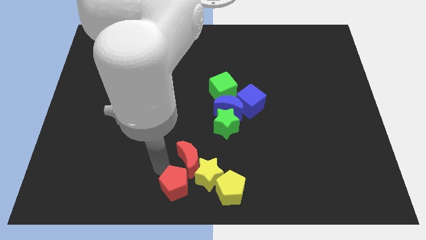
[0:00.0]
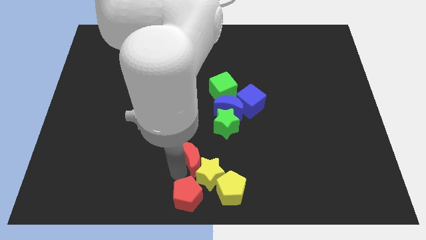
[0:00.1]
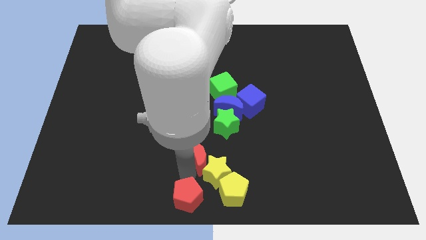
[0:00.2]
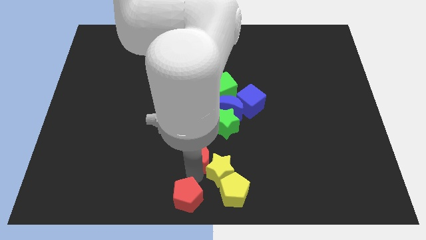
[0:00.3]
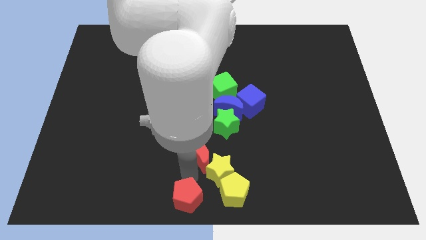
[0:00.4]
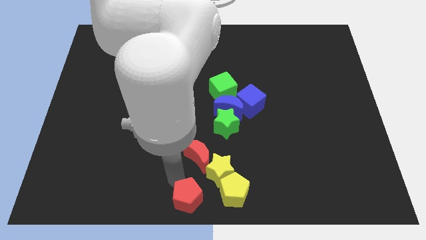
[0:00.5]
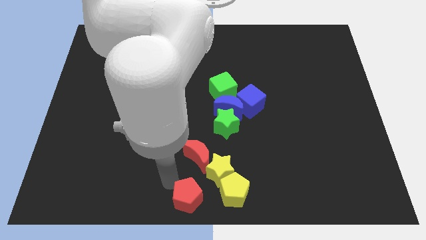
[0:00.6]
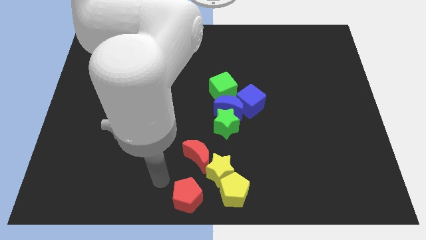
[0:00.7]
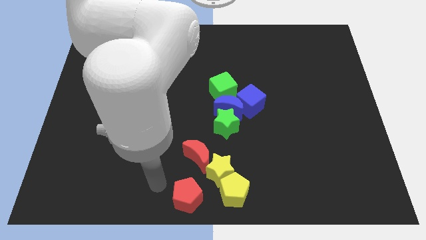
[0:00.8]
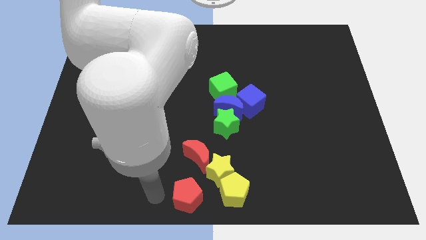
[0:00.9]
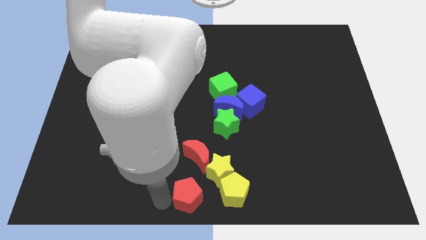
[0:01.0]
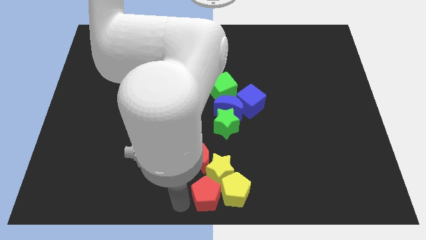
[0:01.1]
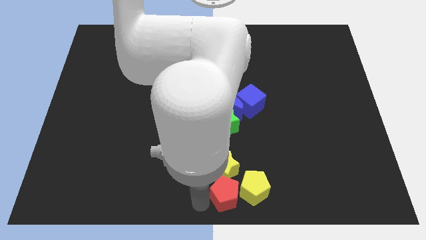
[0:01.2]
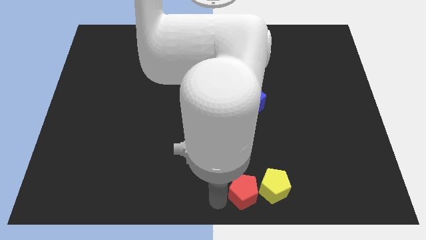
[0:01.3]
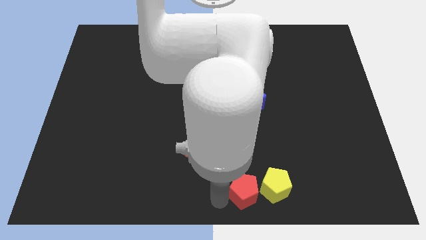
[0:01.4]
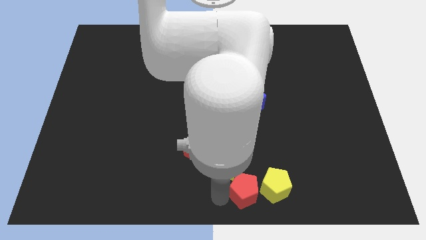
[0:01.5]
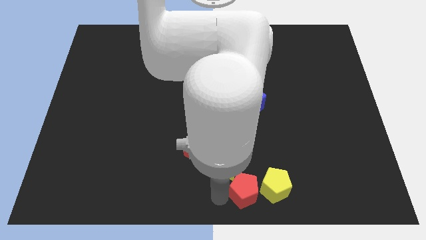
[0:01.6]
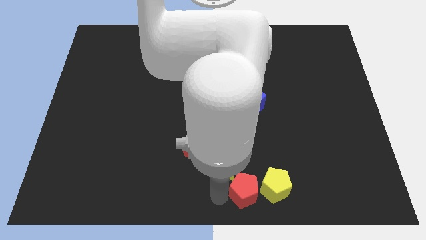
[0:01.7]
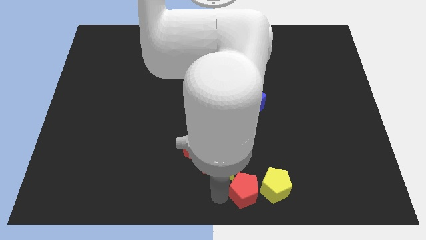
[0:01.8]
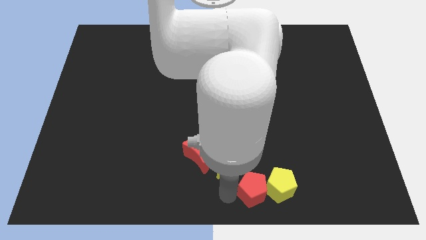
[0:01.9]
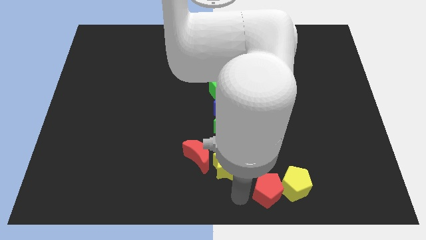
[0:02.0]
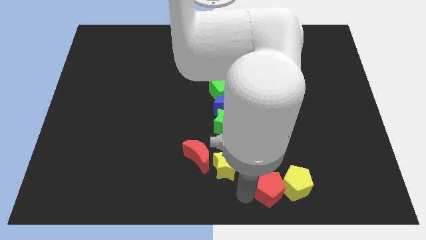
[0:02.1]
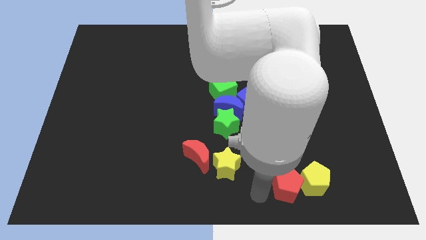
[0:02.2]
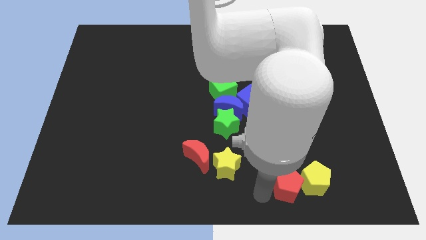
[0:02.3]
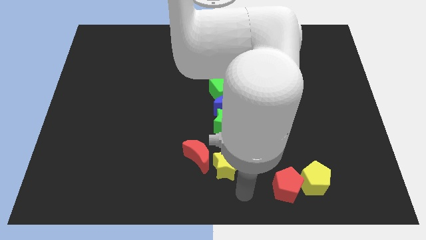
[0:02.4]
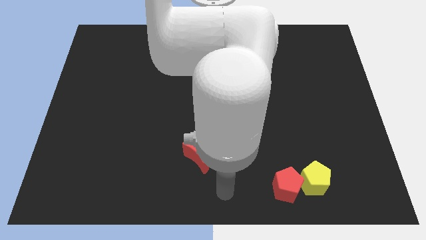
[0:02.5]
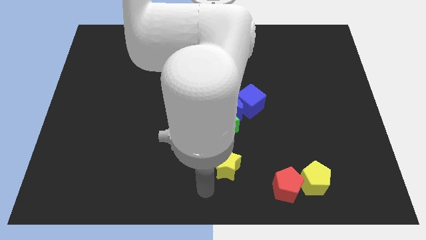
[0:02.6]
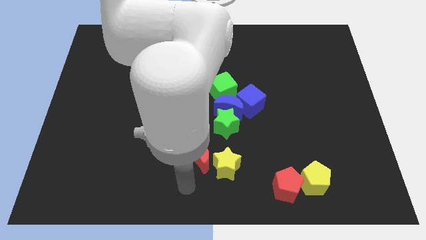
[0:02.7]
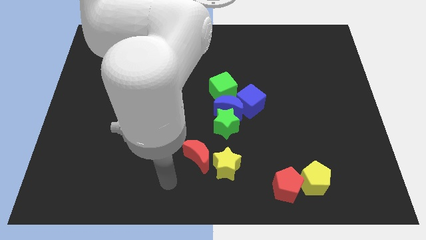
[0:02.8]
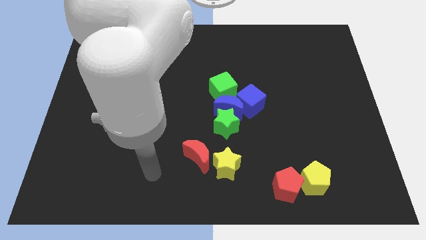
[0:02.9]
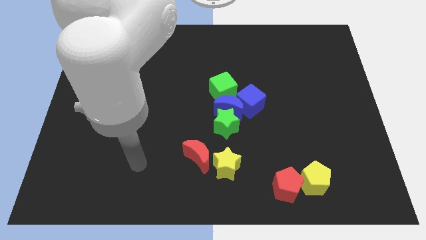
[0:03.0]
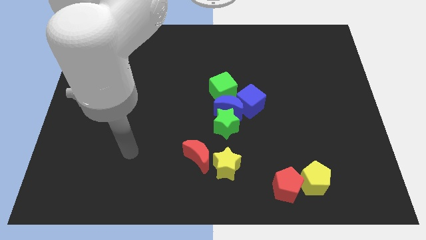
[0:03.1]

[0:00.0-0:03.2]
push the red pentagon into the yellow pentagon

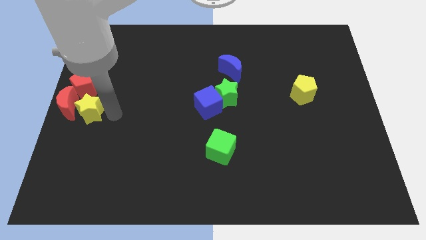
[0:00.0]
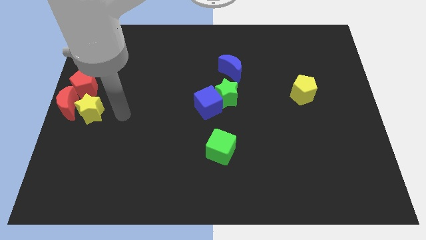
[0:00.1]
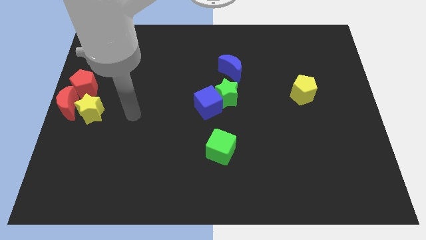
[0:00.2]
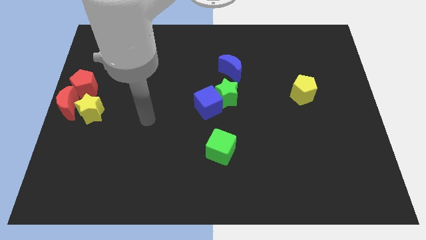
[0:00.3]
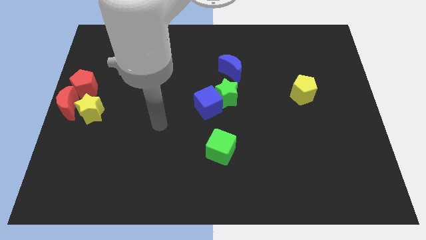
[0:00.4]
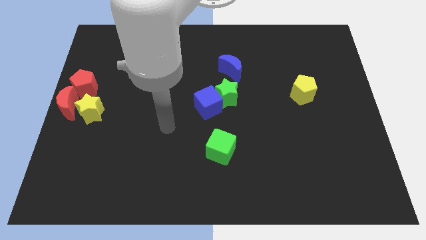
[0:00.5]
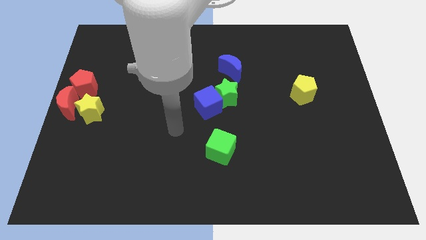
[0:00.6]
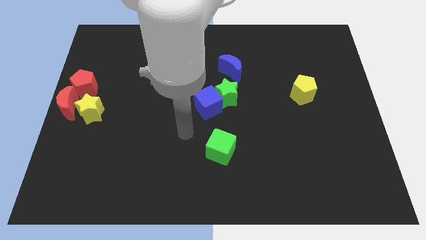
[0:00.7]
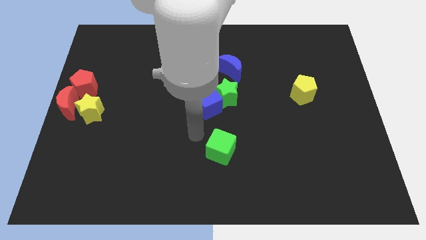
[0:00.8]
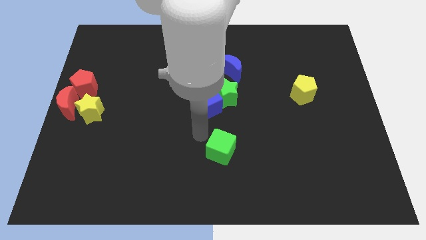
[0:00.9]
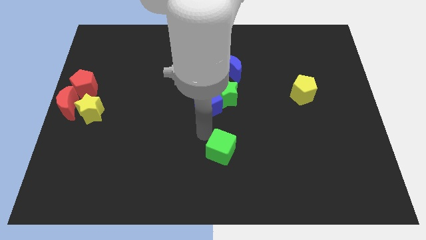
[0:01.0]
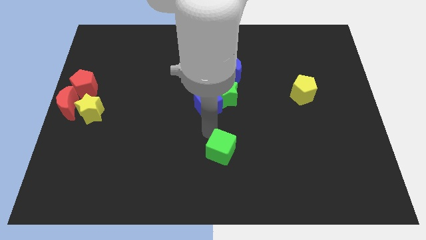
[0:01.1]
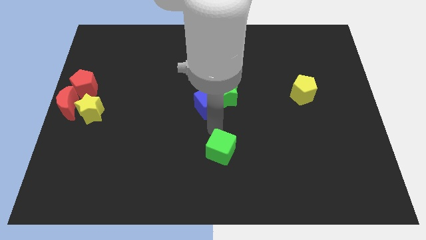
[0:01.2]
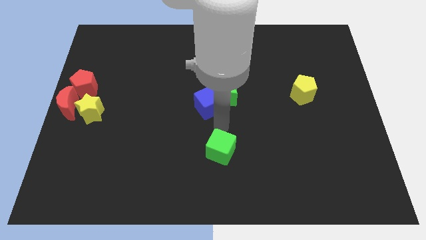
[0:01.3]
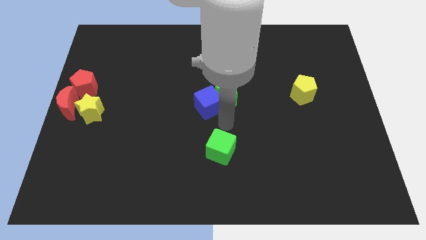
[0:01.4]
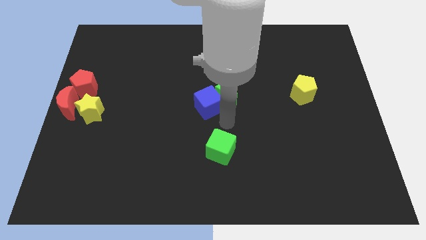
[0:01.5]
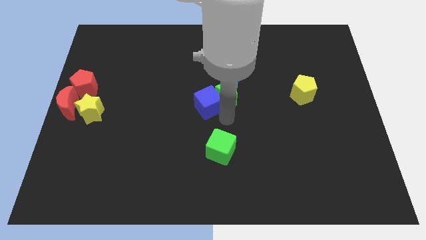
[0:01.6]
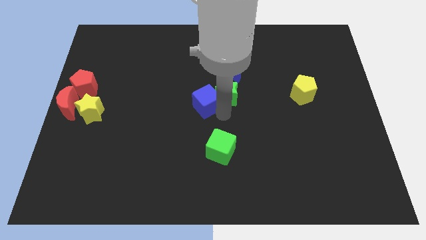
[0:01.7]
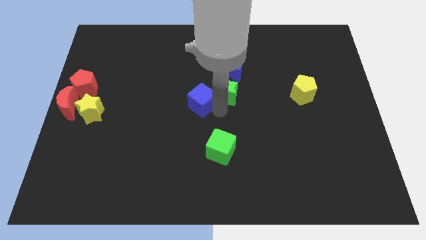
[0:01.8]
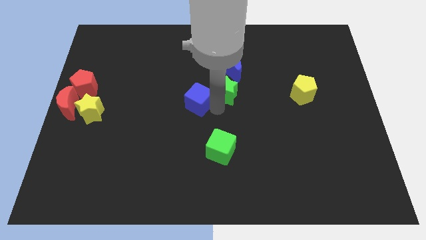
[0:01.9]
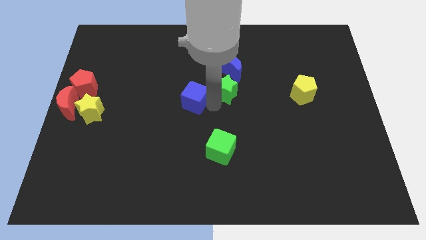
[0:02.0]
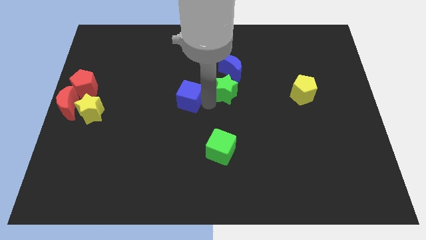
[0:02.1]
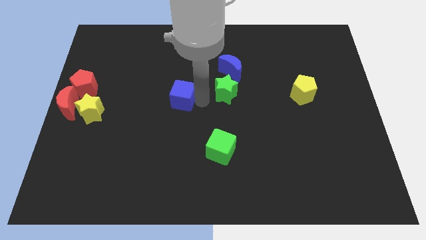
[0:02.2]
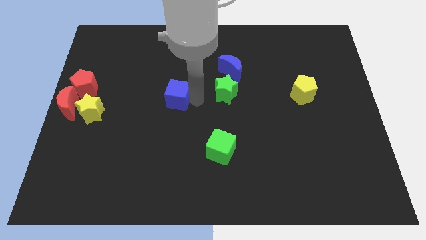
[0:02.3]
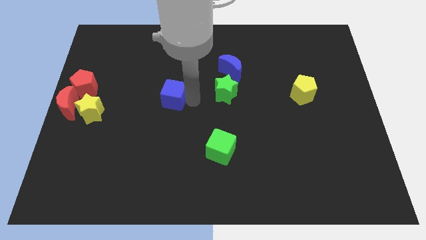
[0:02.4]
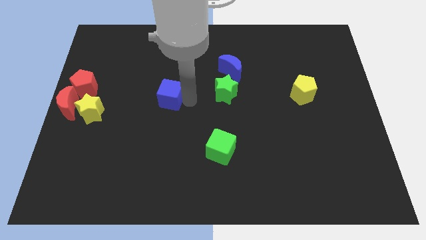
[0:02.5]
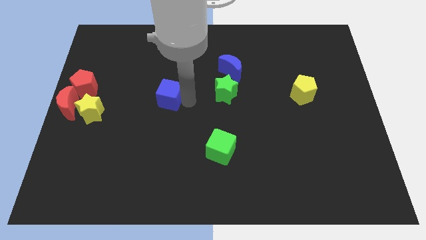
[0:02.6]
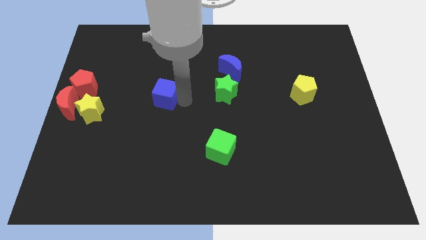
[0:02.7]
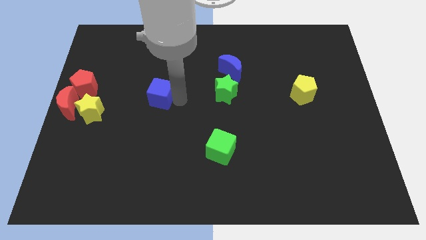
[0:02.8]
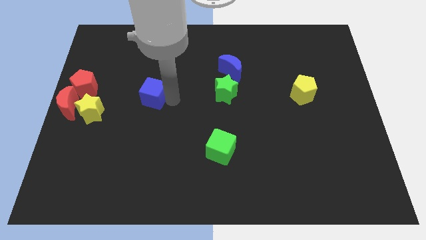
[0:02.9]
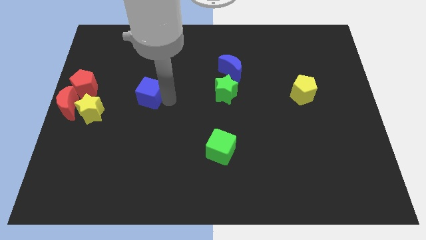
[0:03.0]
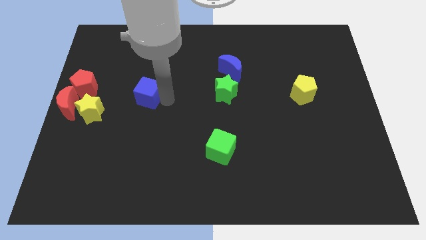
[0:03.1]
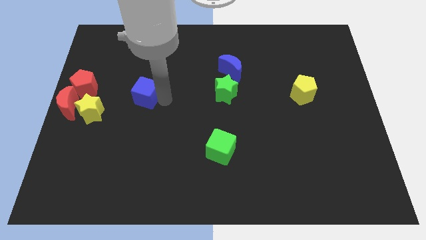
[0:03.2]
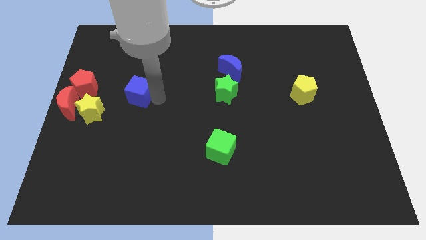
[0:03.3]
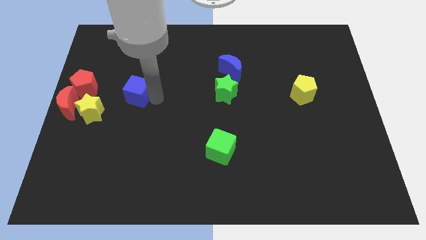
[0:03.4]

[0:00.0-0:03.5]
take the blue cube away from the green star

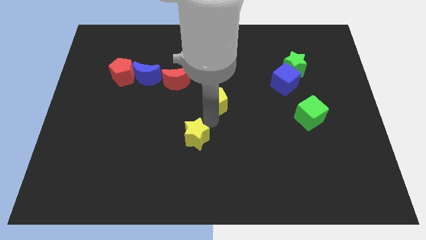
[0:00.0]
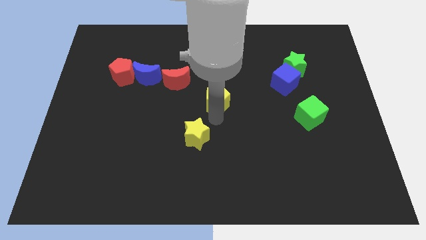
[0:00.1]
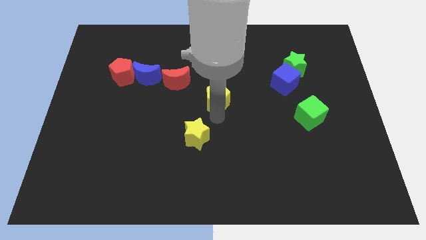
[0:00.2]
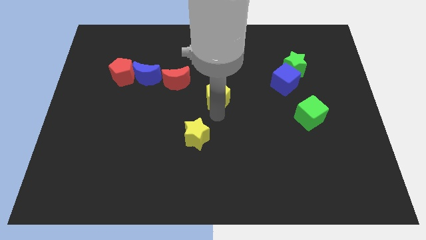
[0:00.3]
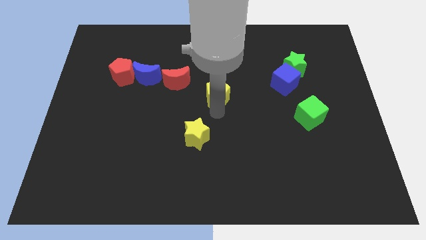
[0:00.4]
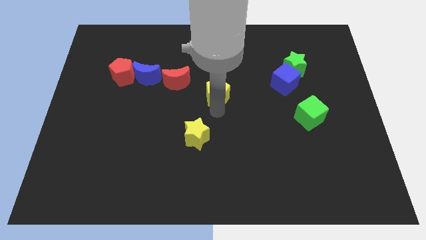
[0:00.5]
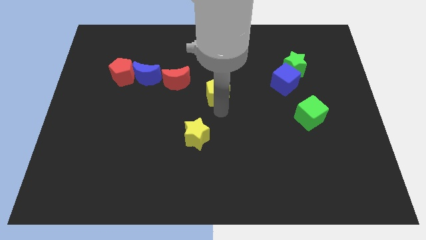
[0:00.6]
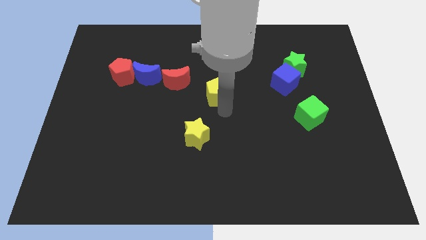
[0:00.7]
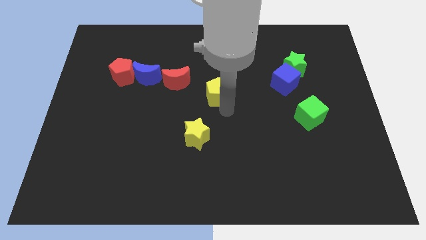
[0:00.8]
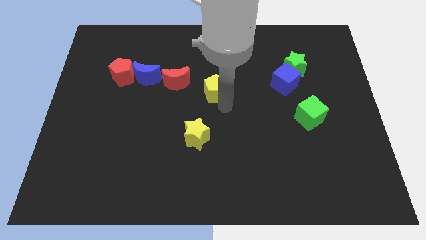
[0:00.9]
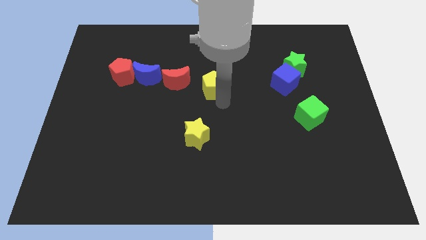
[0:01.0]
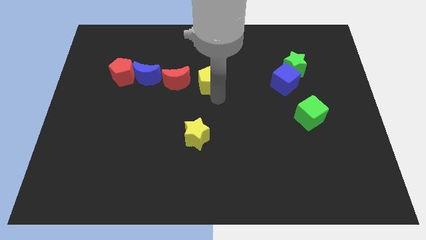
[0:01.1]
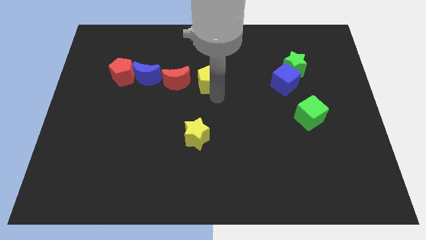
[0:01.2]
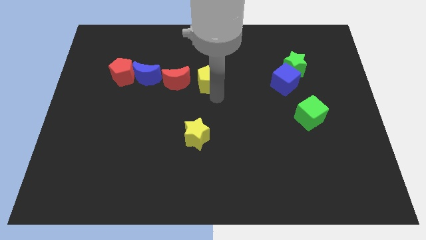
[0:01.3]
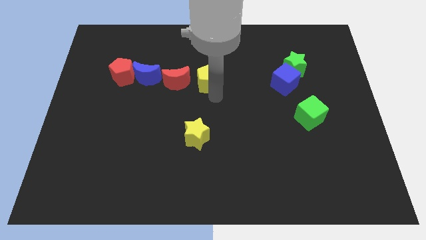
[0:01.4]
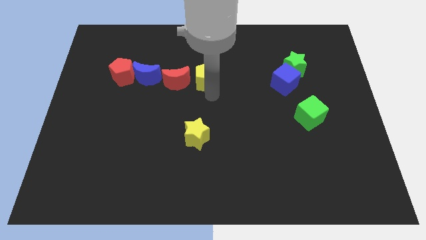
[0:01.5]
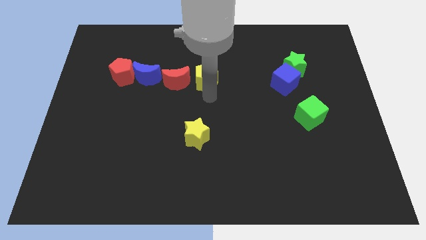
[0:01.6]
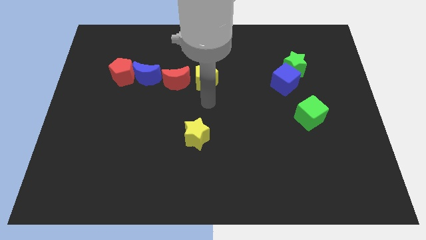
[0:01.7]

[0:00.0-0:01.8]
move the yellow pentagon to the right of the red moon

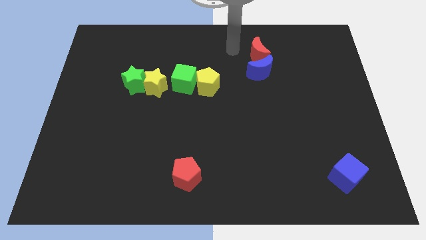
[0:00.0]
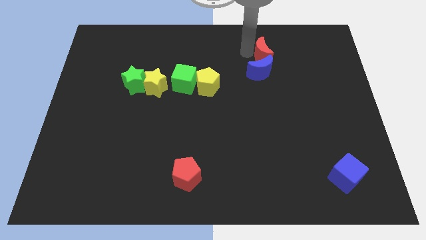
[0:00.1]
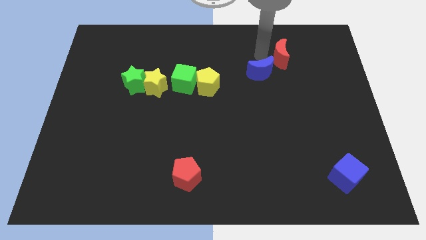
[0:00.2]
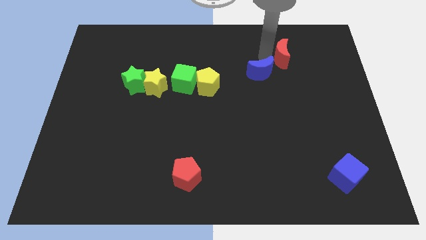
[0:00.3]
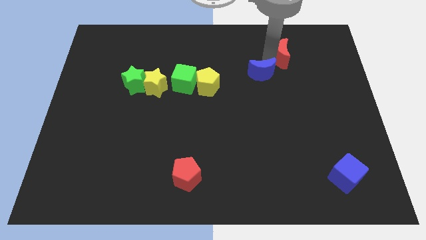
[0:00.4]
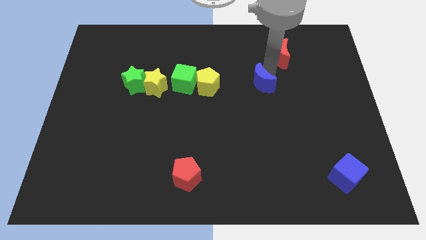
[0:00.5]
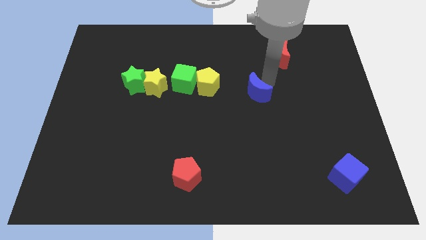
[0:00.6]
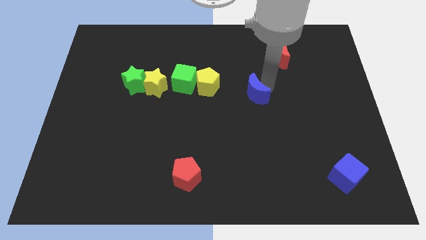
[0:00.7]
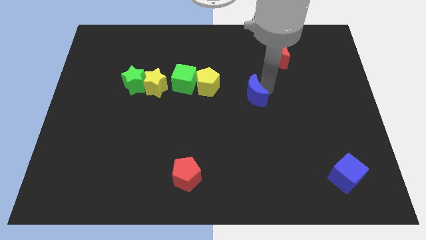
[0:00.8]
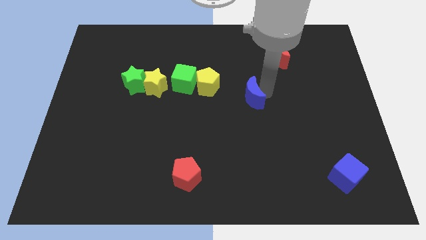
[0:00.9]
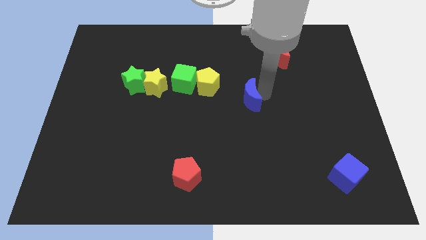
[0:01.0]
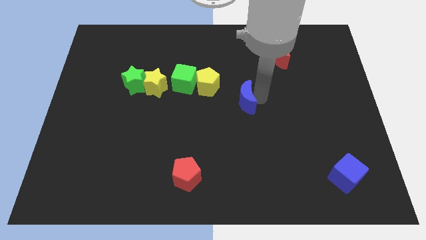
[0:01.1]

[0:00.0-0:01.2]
move the blue moon away from the red moon
